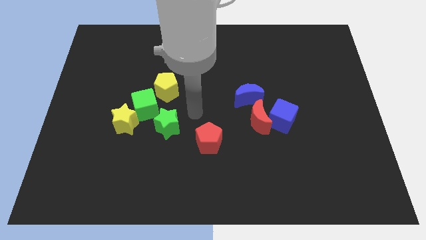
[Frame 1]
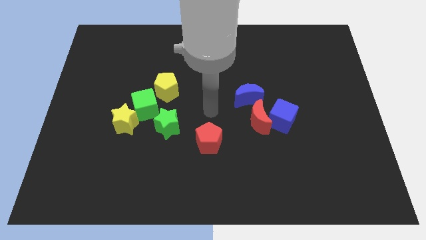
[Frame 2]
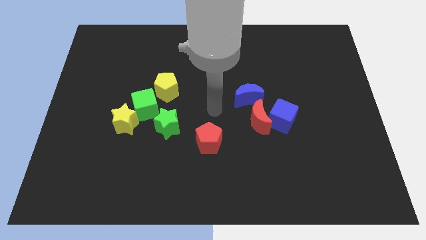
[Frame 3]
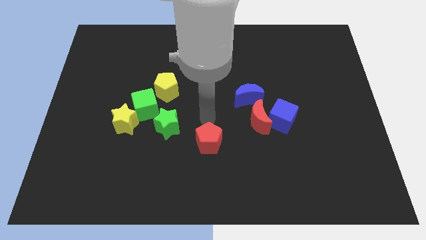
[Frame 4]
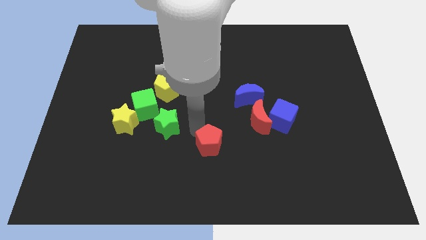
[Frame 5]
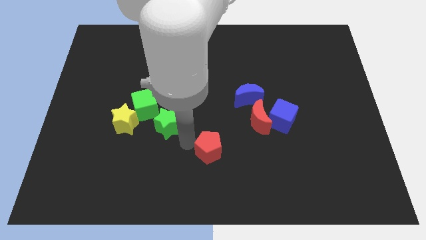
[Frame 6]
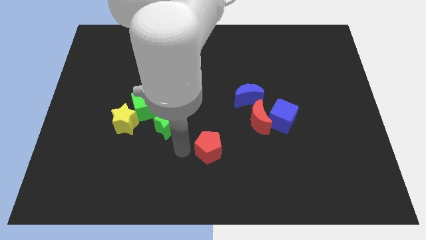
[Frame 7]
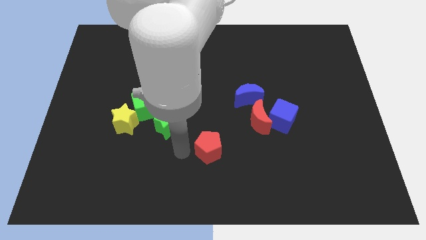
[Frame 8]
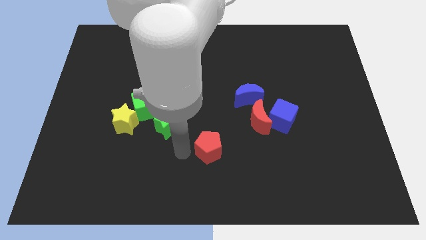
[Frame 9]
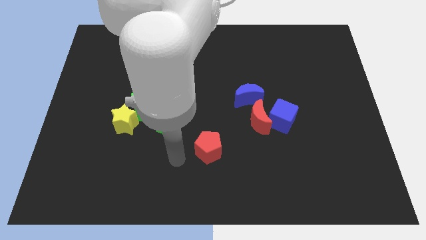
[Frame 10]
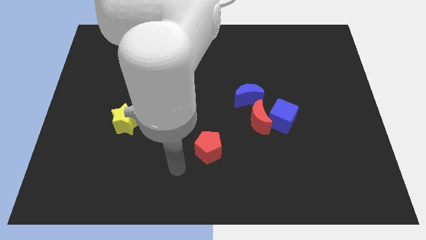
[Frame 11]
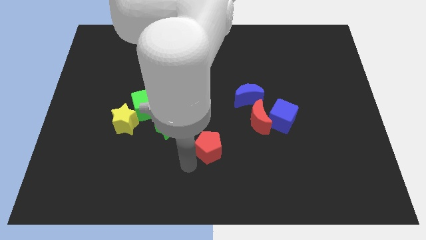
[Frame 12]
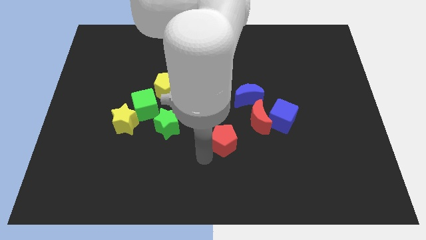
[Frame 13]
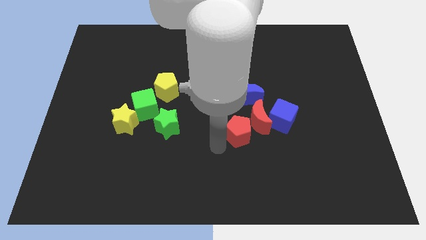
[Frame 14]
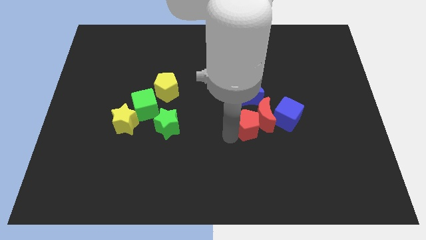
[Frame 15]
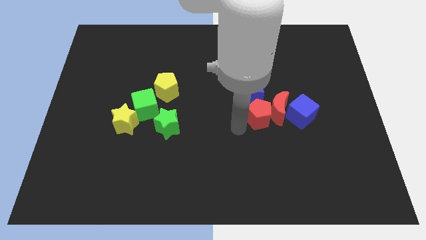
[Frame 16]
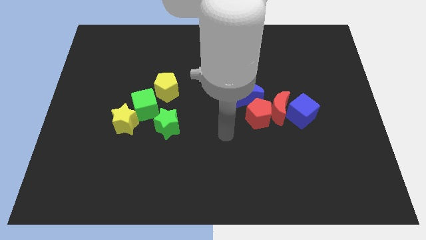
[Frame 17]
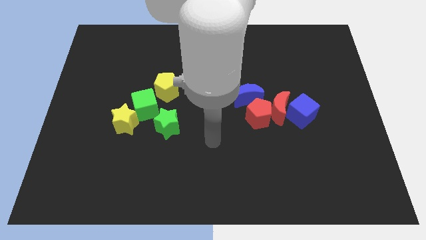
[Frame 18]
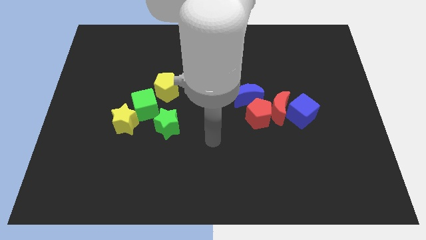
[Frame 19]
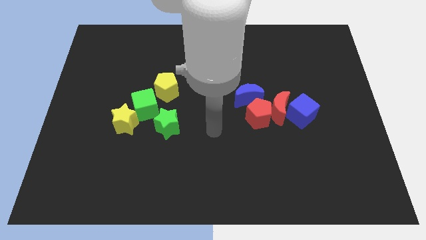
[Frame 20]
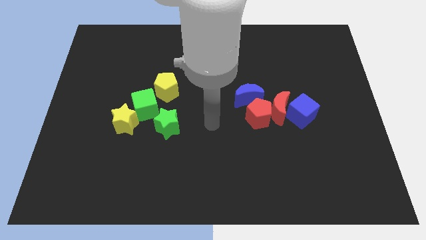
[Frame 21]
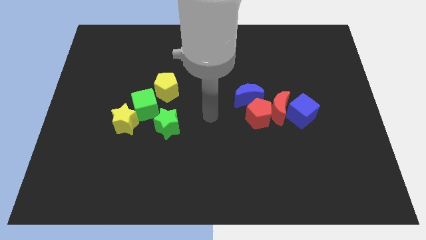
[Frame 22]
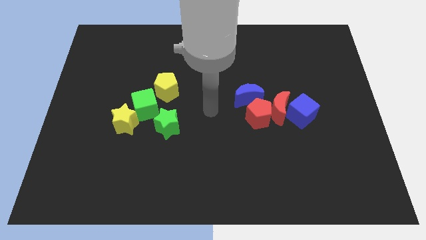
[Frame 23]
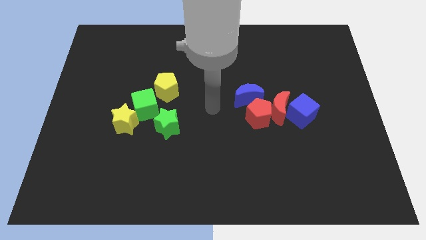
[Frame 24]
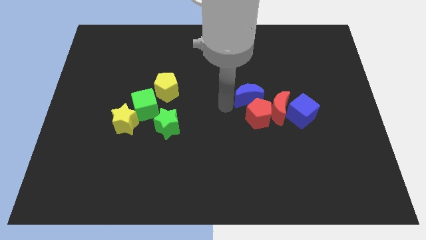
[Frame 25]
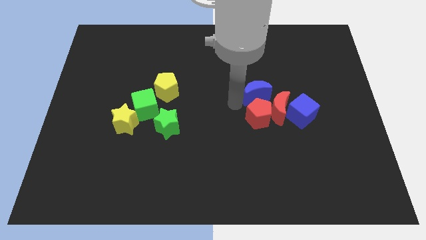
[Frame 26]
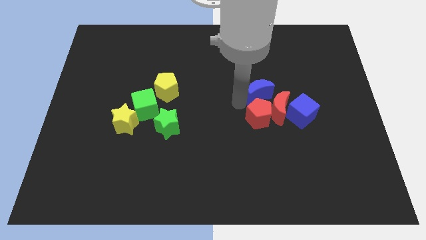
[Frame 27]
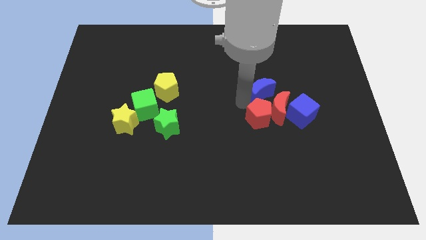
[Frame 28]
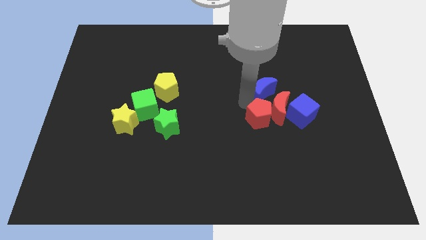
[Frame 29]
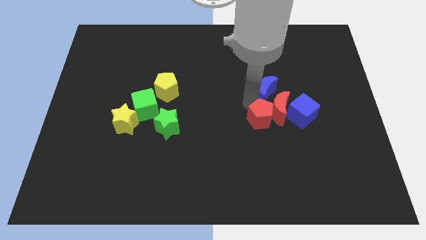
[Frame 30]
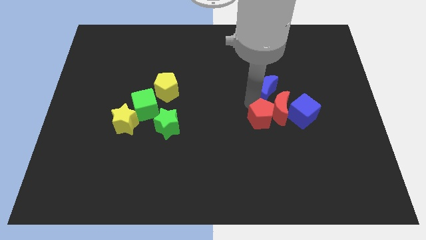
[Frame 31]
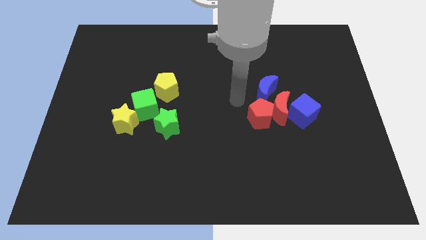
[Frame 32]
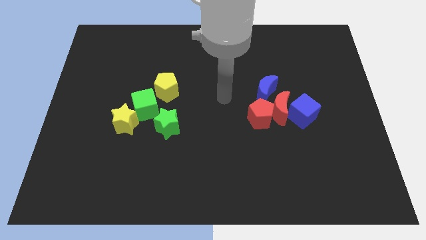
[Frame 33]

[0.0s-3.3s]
move the red pentagon into the group of object

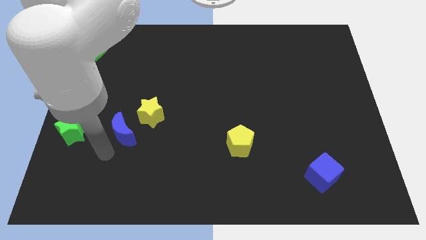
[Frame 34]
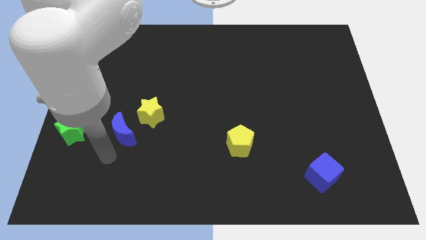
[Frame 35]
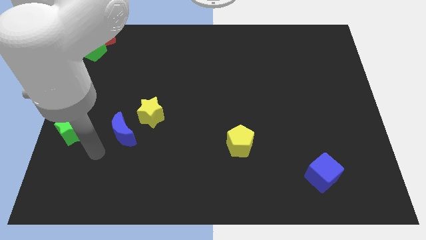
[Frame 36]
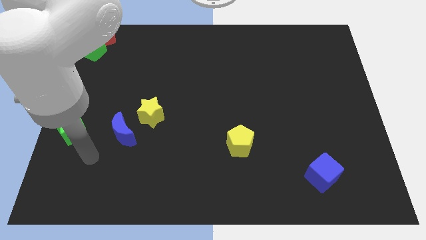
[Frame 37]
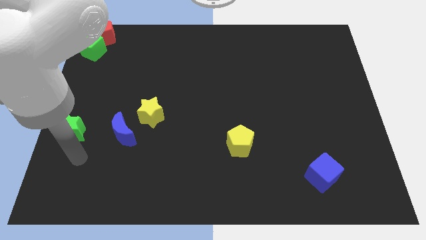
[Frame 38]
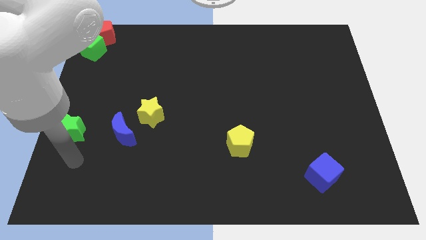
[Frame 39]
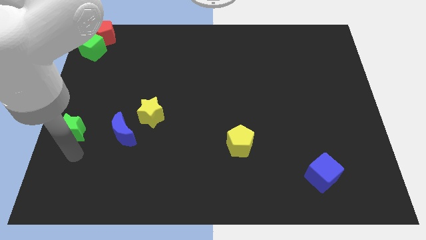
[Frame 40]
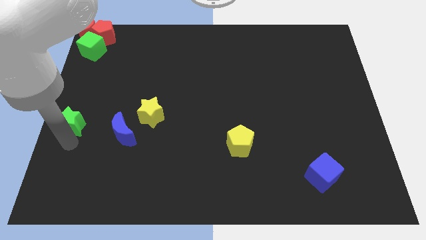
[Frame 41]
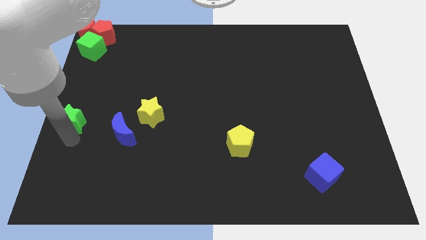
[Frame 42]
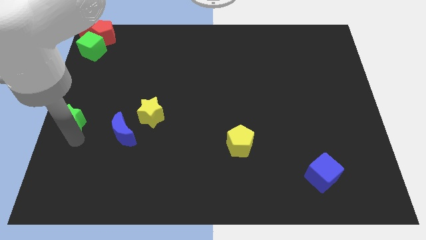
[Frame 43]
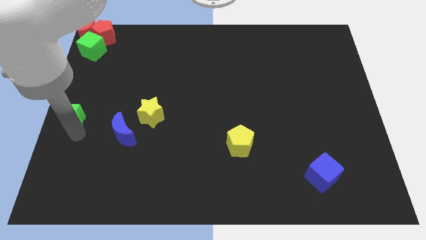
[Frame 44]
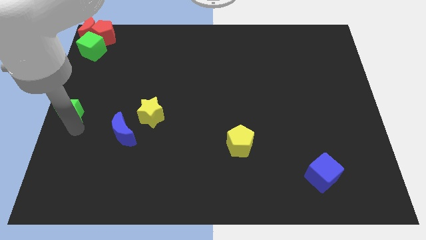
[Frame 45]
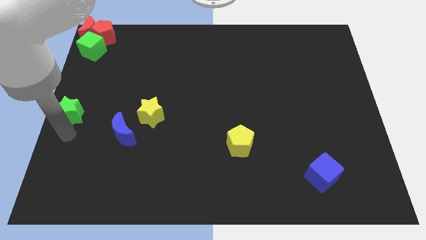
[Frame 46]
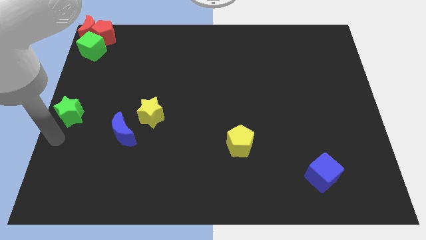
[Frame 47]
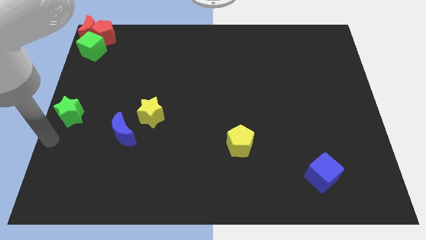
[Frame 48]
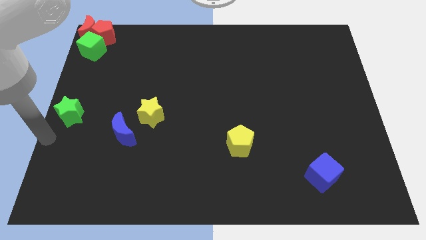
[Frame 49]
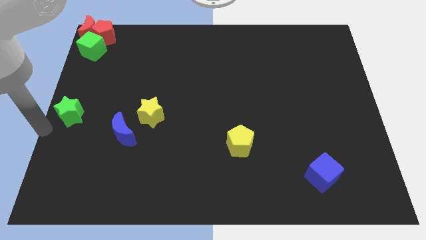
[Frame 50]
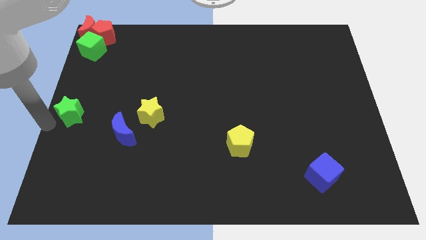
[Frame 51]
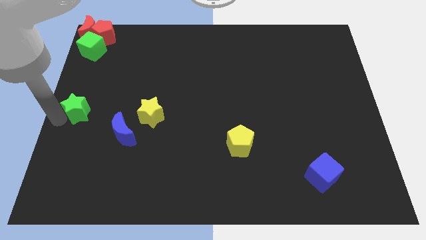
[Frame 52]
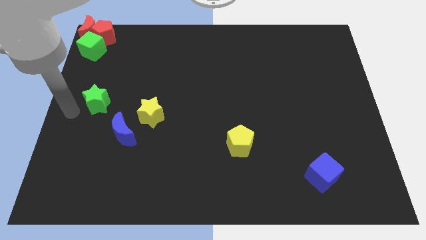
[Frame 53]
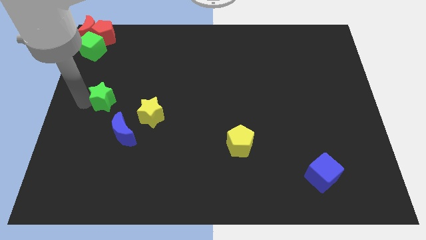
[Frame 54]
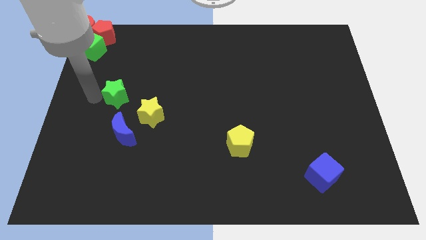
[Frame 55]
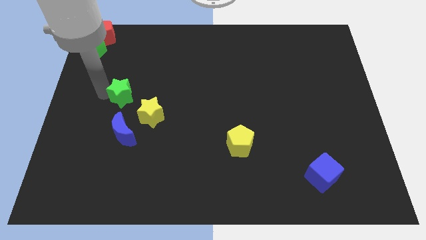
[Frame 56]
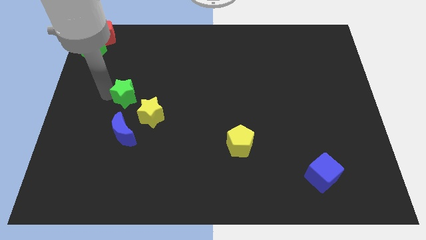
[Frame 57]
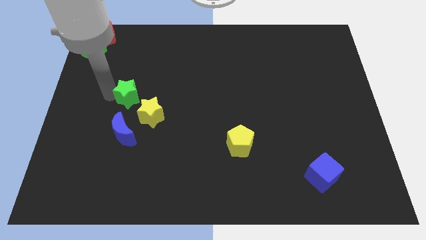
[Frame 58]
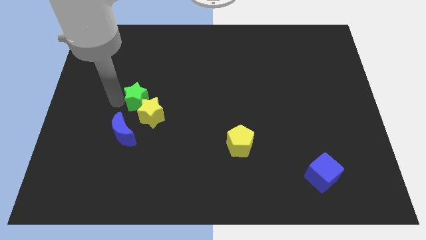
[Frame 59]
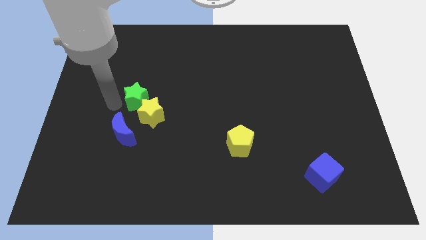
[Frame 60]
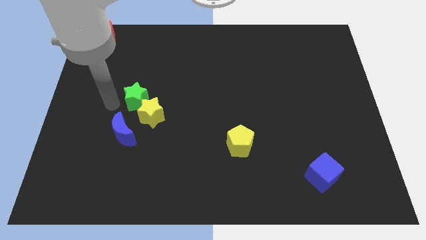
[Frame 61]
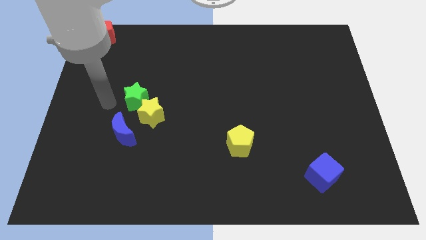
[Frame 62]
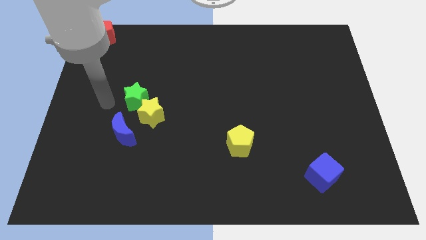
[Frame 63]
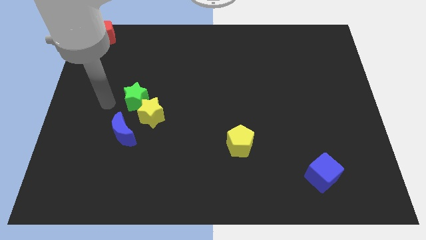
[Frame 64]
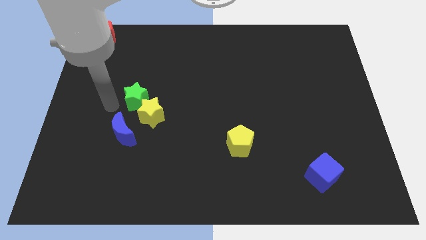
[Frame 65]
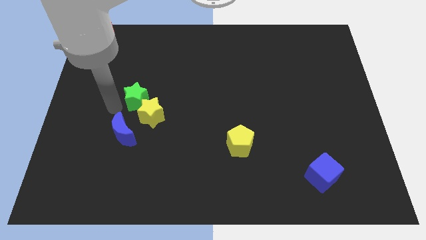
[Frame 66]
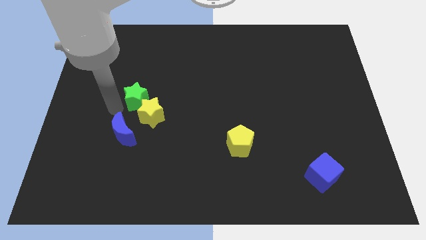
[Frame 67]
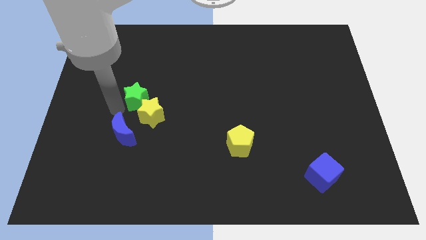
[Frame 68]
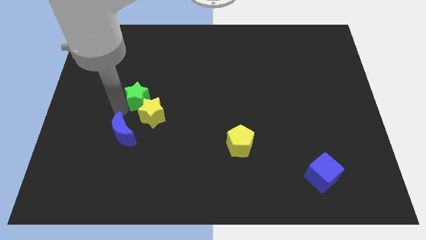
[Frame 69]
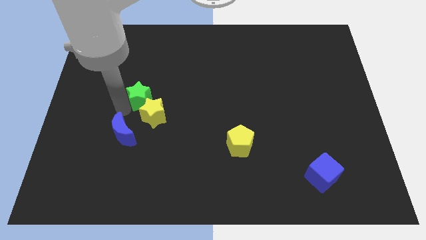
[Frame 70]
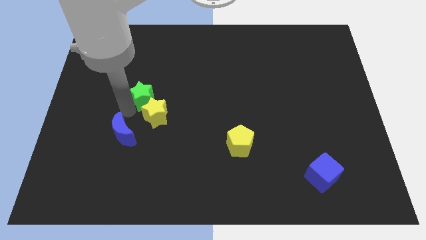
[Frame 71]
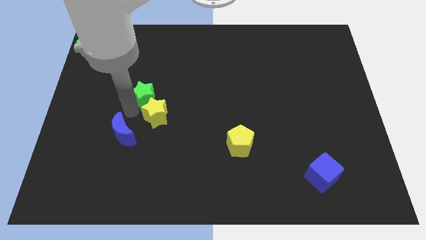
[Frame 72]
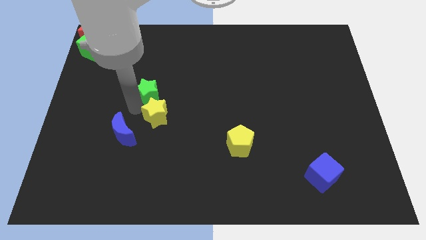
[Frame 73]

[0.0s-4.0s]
slide the green star into the yellow star

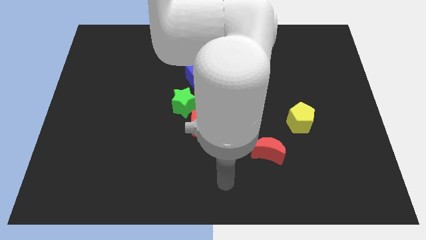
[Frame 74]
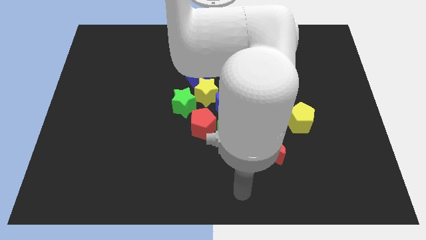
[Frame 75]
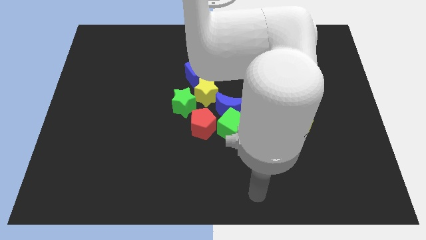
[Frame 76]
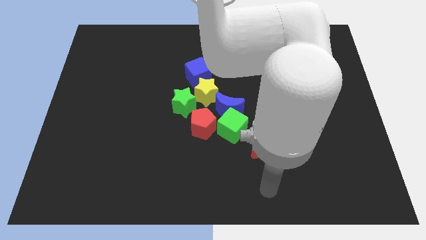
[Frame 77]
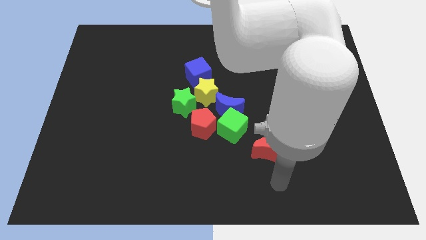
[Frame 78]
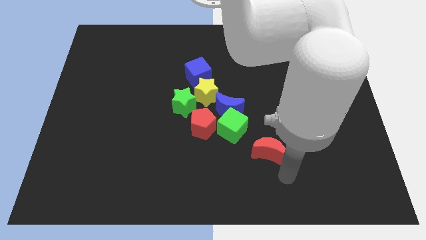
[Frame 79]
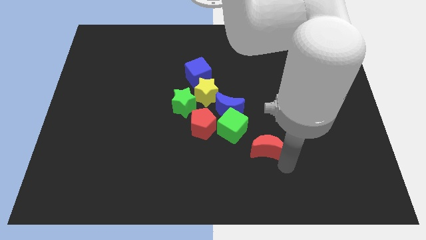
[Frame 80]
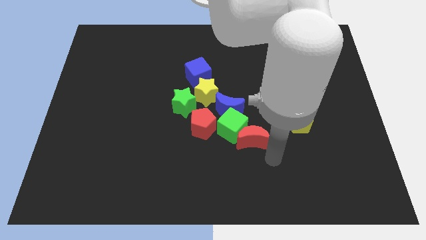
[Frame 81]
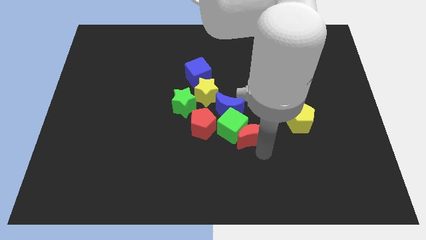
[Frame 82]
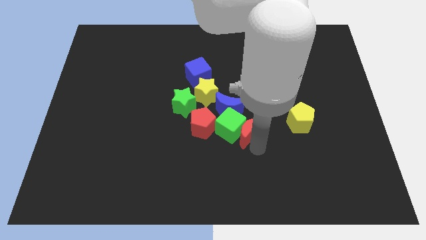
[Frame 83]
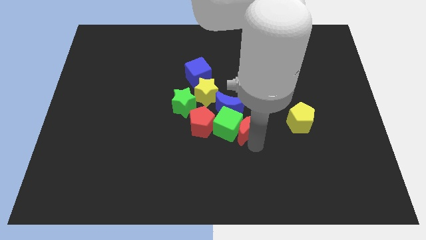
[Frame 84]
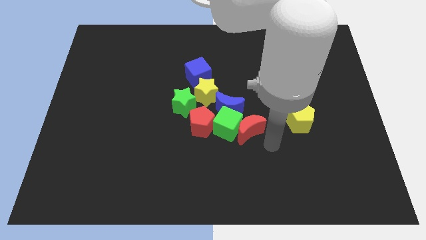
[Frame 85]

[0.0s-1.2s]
push the red moon into the group of blocks

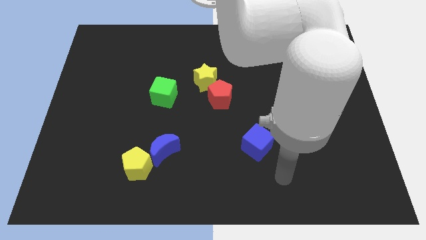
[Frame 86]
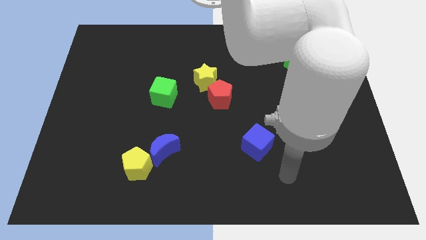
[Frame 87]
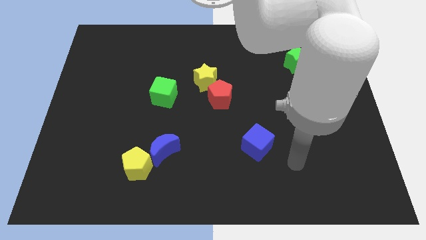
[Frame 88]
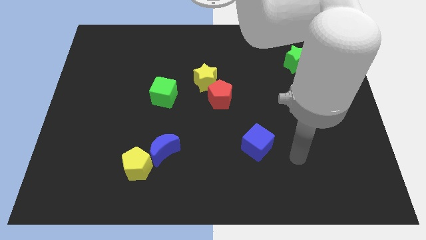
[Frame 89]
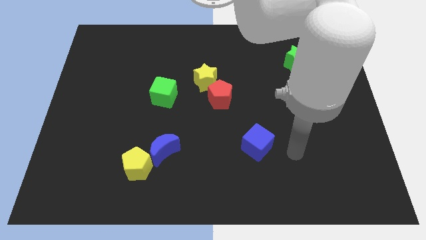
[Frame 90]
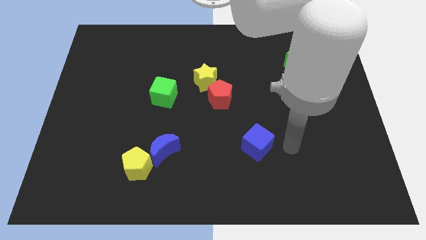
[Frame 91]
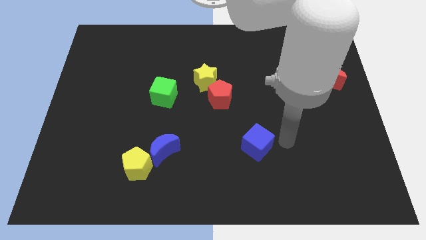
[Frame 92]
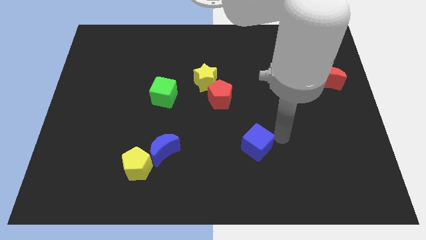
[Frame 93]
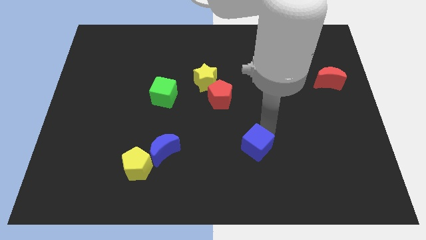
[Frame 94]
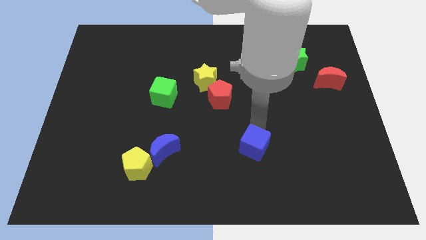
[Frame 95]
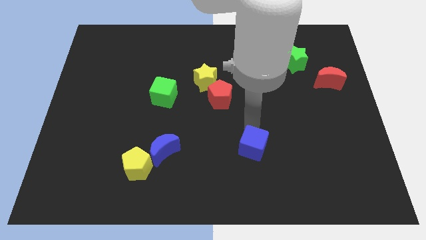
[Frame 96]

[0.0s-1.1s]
place your arm to the top of blue cube
